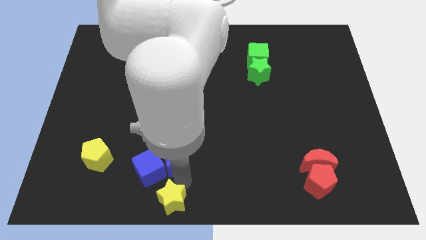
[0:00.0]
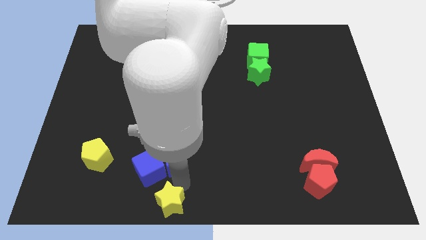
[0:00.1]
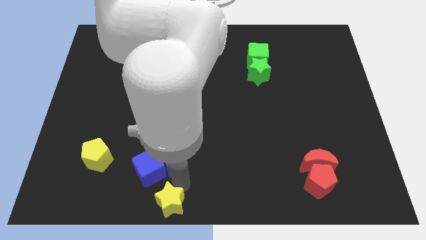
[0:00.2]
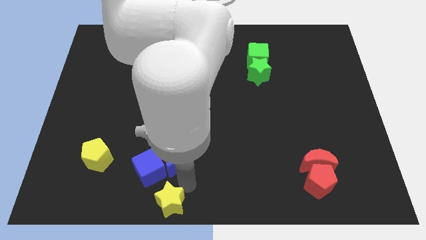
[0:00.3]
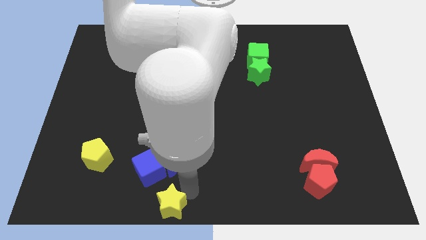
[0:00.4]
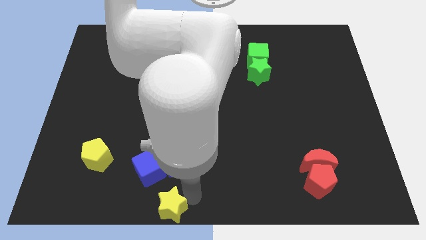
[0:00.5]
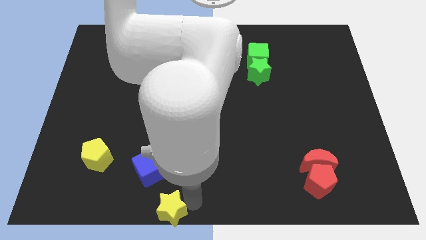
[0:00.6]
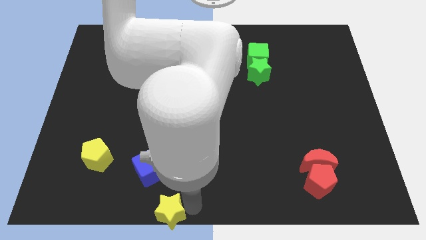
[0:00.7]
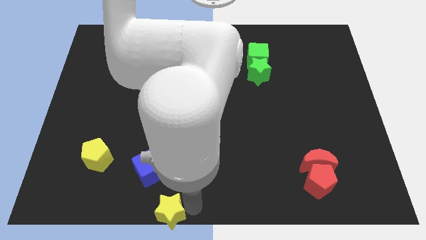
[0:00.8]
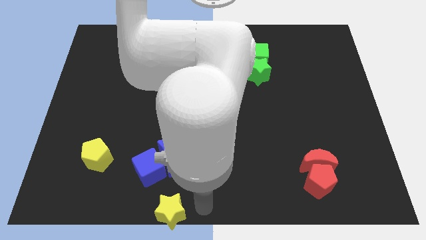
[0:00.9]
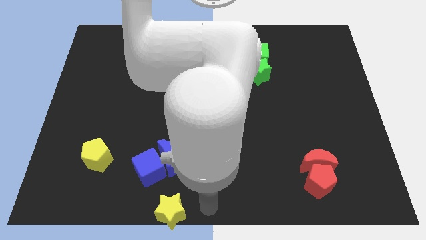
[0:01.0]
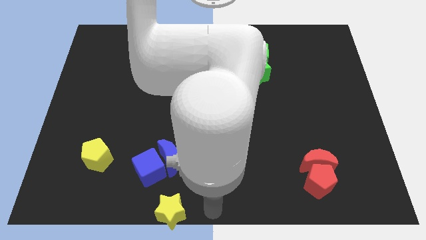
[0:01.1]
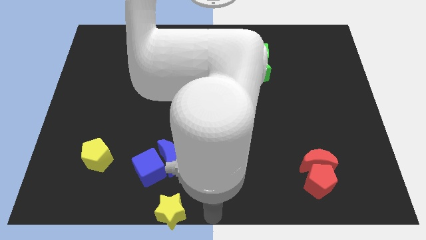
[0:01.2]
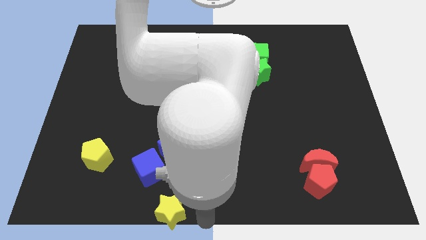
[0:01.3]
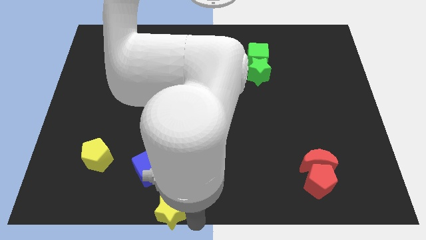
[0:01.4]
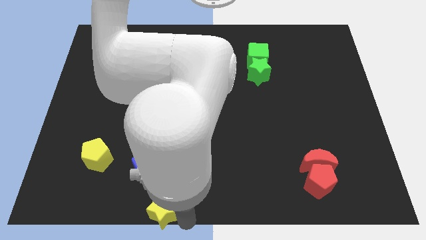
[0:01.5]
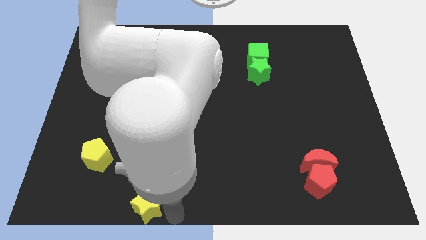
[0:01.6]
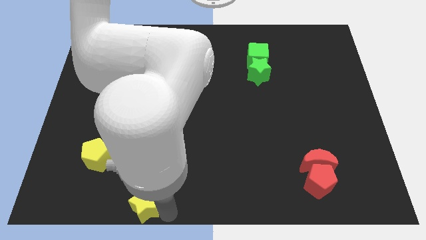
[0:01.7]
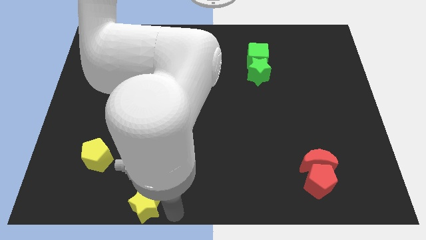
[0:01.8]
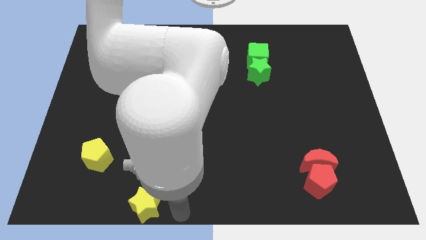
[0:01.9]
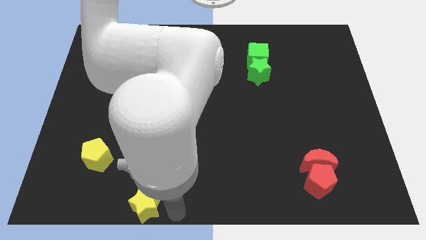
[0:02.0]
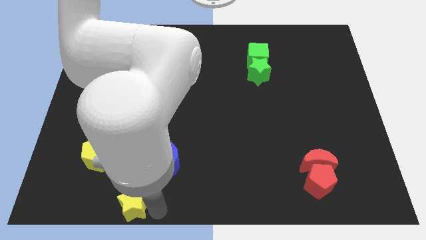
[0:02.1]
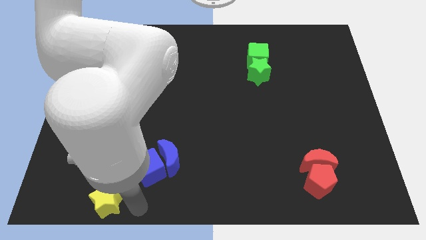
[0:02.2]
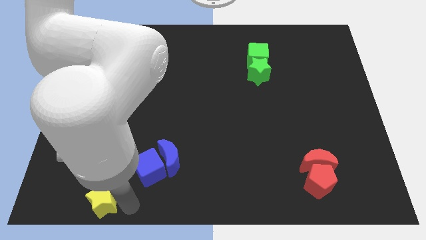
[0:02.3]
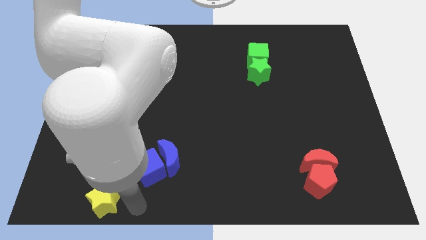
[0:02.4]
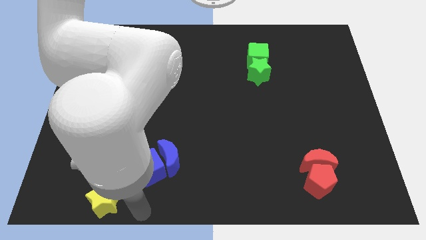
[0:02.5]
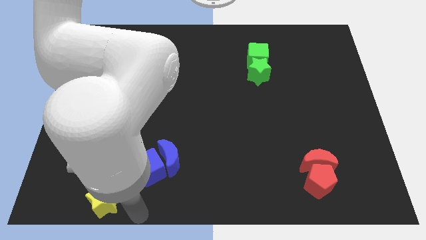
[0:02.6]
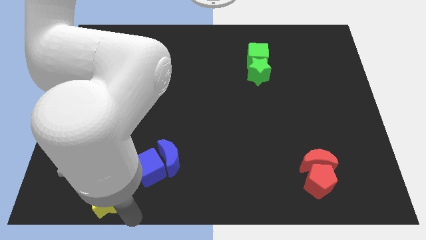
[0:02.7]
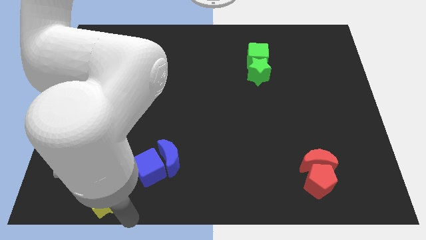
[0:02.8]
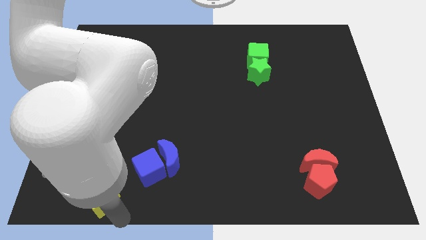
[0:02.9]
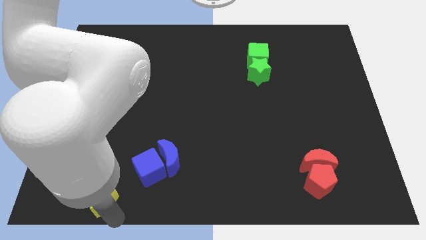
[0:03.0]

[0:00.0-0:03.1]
move yellow star towards bottom left

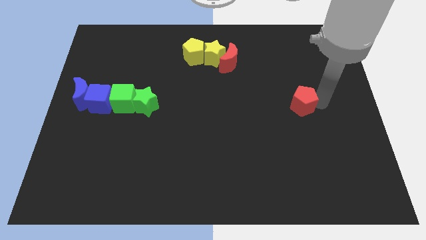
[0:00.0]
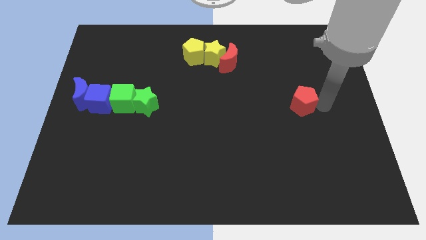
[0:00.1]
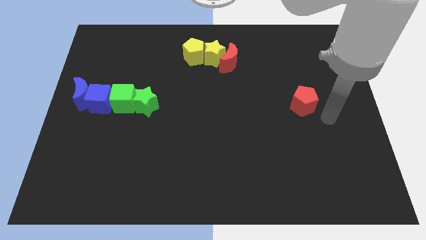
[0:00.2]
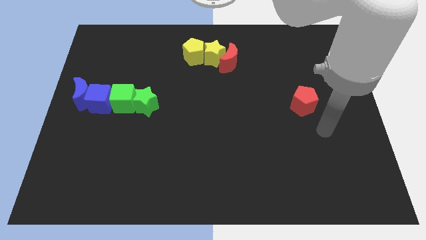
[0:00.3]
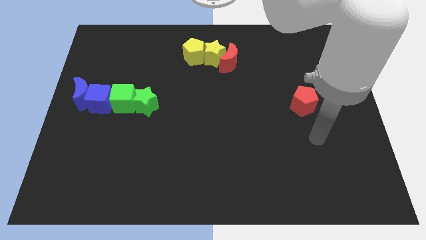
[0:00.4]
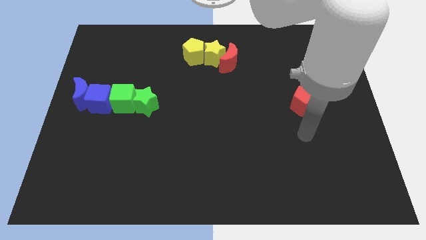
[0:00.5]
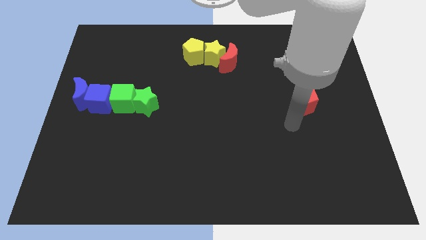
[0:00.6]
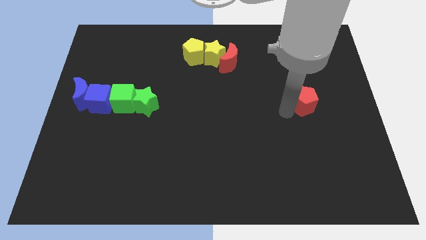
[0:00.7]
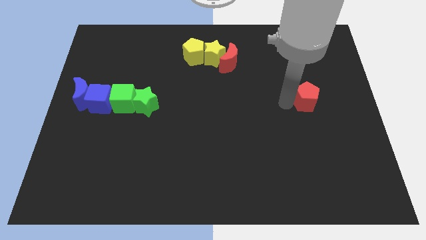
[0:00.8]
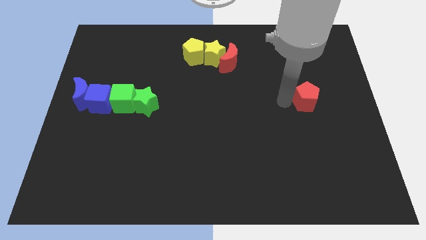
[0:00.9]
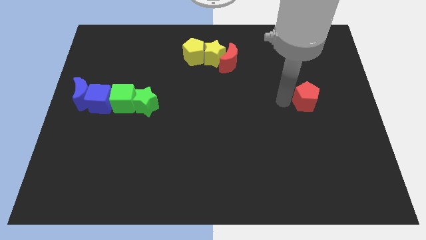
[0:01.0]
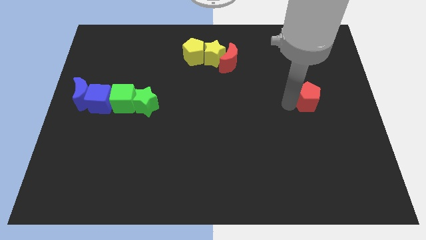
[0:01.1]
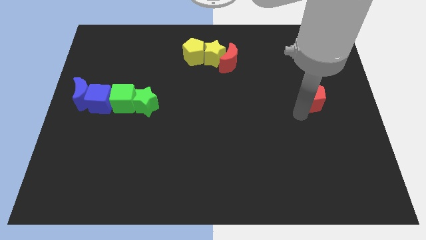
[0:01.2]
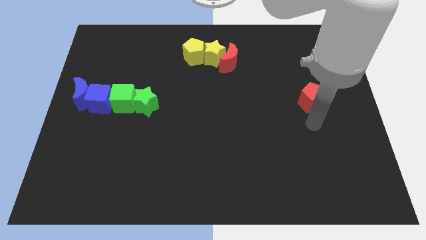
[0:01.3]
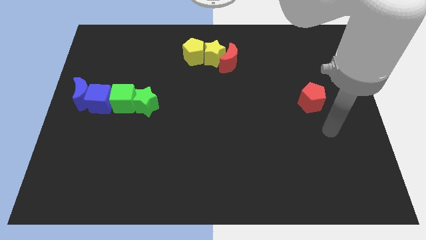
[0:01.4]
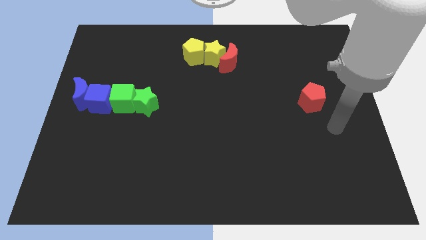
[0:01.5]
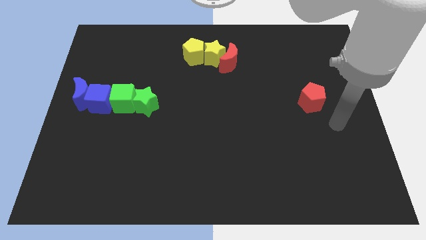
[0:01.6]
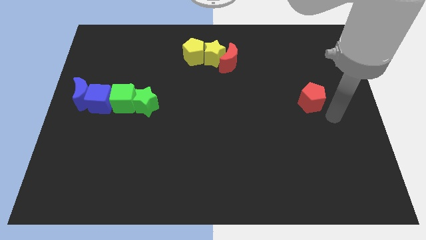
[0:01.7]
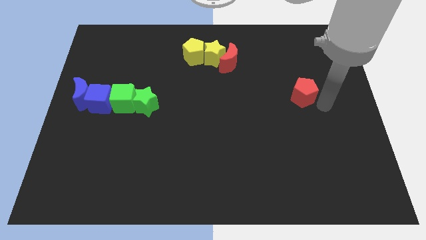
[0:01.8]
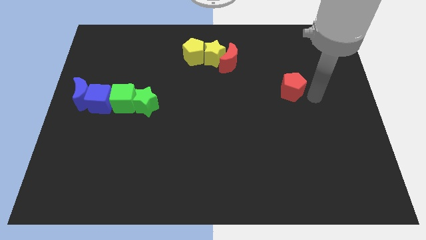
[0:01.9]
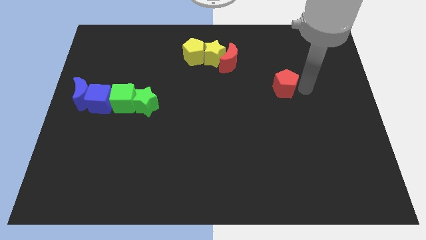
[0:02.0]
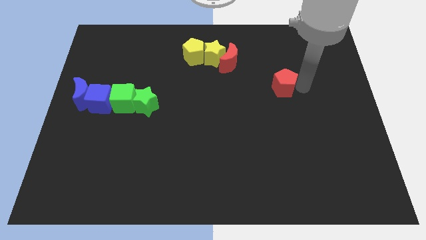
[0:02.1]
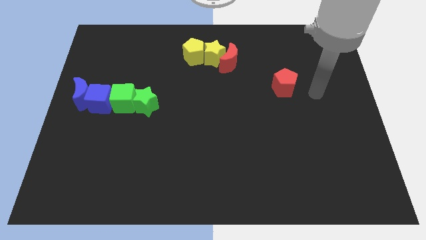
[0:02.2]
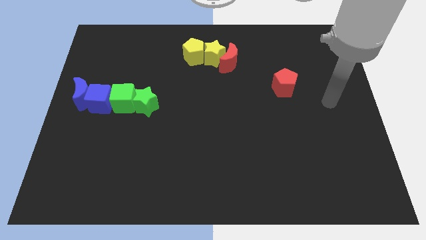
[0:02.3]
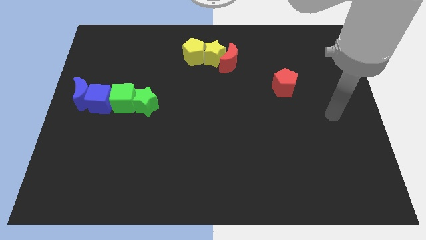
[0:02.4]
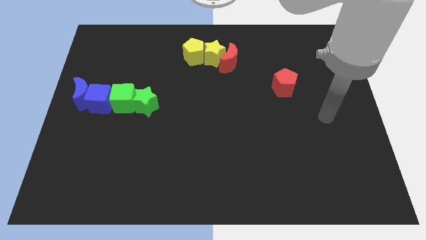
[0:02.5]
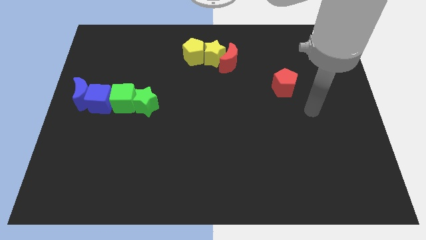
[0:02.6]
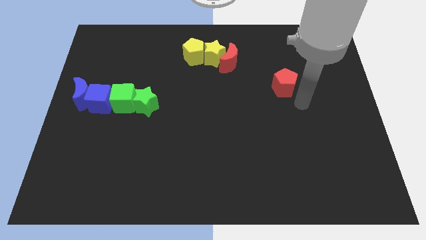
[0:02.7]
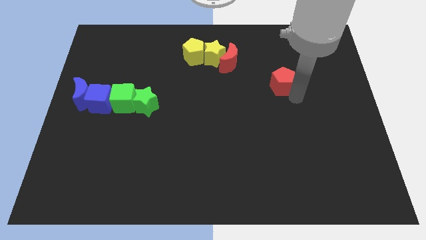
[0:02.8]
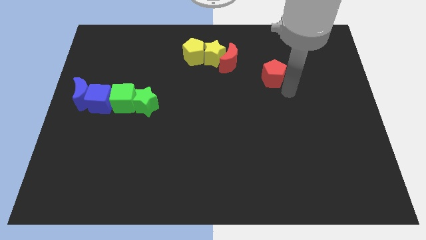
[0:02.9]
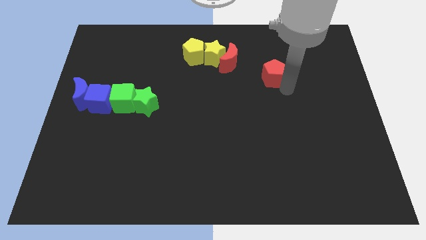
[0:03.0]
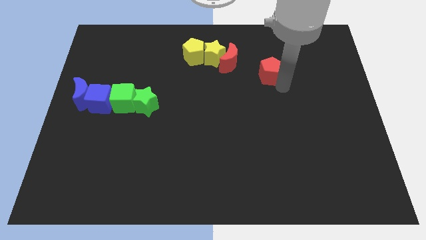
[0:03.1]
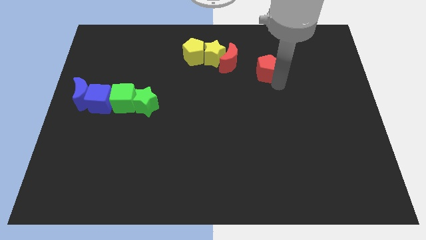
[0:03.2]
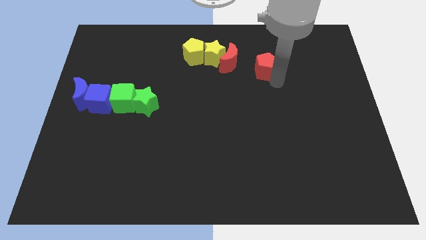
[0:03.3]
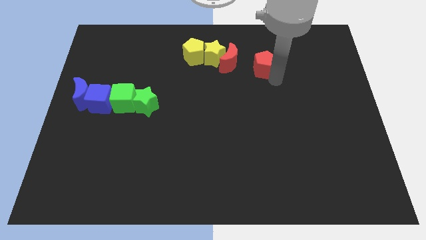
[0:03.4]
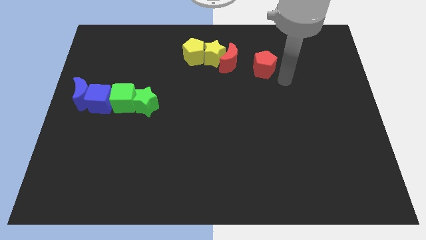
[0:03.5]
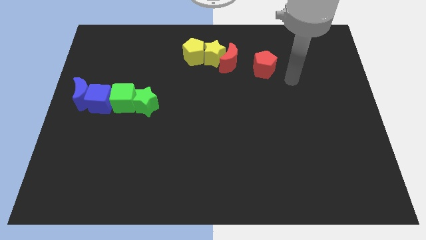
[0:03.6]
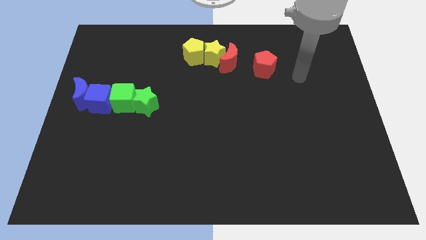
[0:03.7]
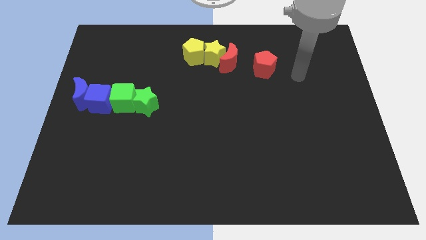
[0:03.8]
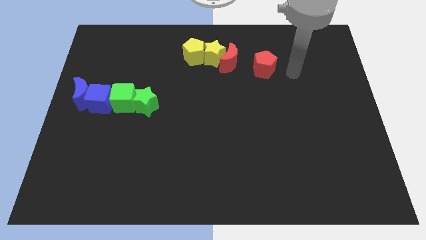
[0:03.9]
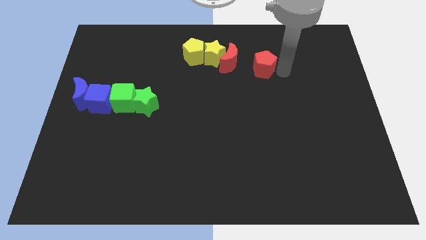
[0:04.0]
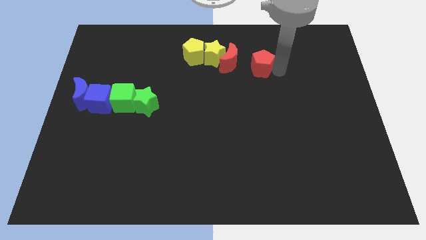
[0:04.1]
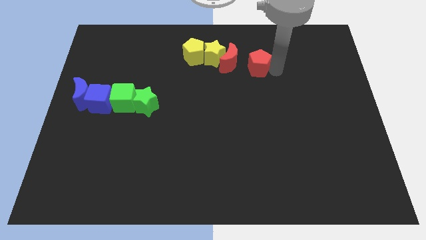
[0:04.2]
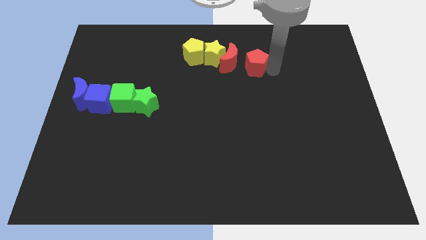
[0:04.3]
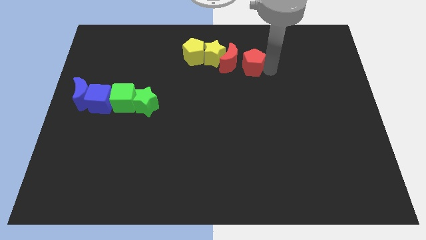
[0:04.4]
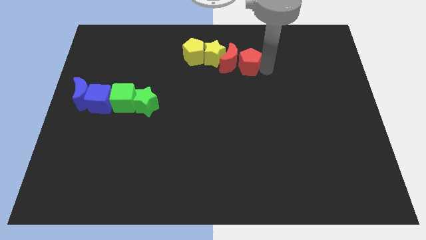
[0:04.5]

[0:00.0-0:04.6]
place red pentagon to the right of red crescent

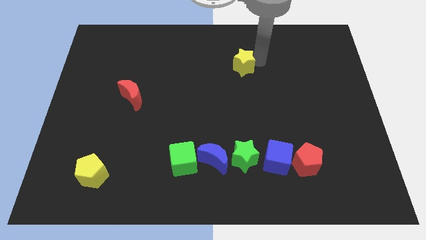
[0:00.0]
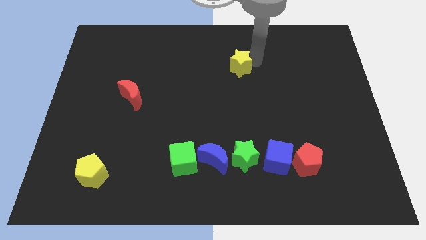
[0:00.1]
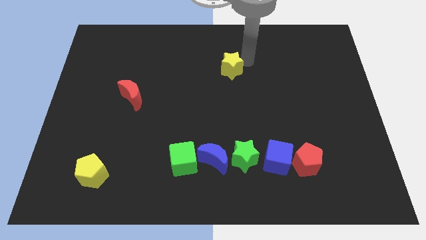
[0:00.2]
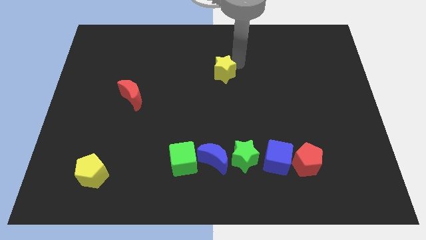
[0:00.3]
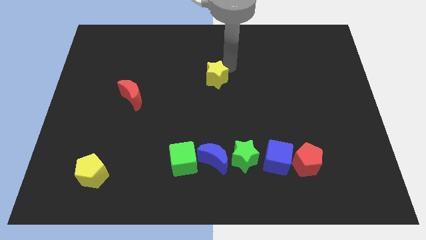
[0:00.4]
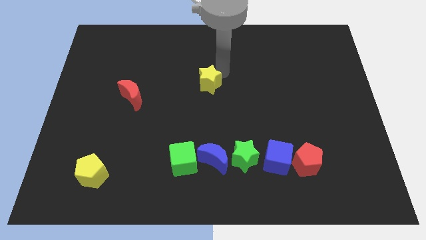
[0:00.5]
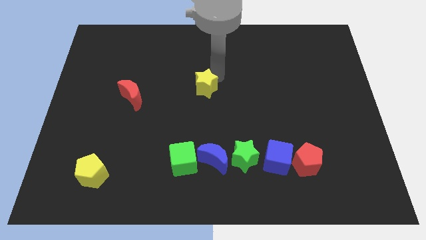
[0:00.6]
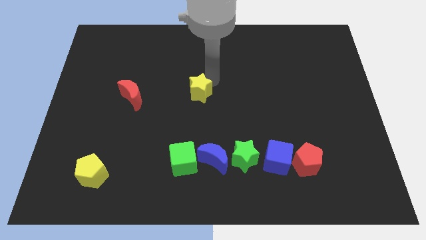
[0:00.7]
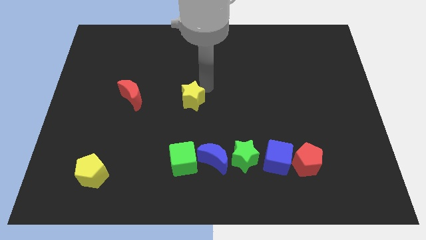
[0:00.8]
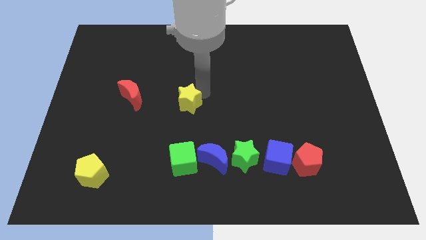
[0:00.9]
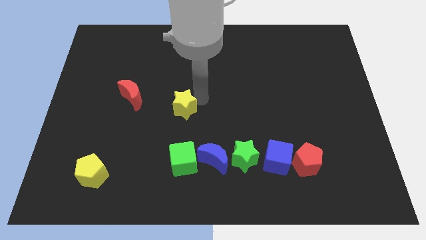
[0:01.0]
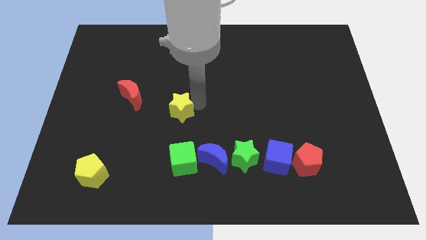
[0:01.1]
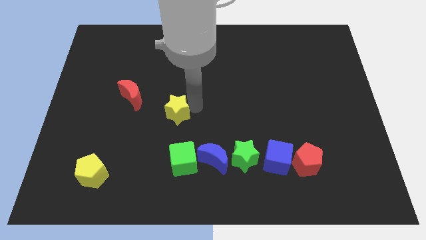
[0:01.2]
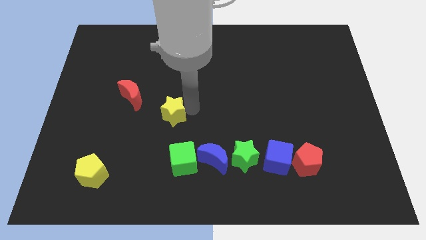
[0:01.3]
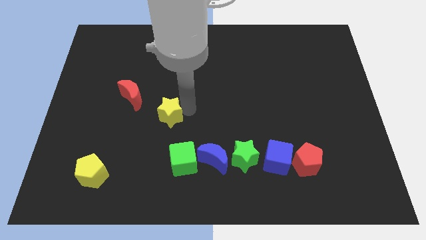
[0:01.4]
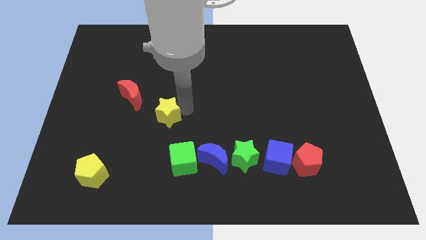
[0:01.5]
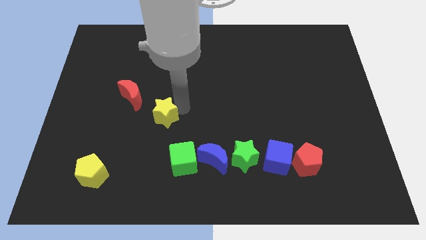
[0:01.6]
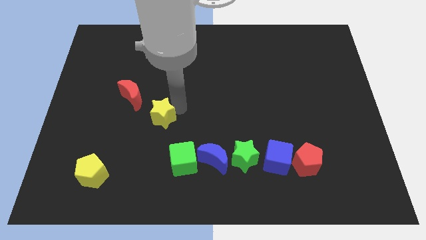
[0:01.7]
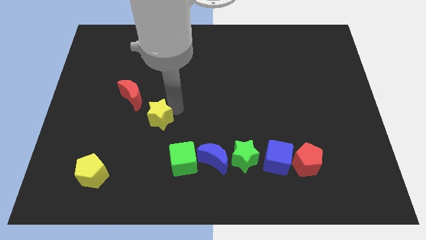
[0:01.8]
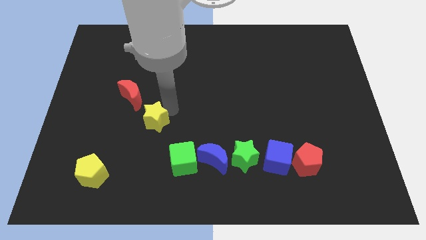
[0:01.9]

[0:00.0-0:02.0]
move the yellow star in between the red crescent and green cube
